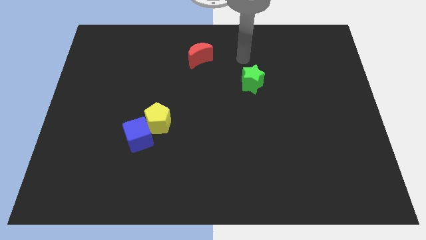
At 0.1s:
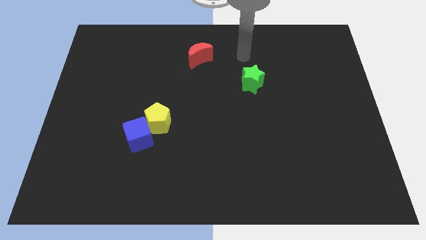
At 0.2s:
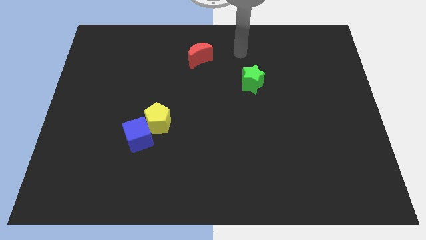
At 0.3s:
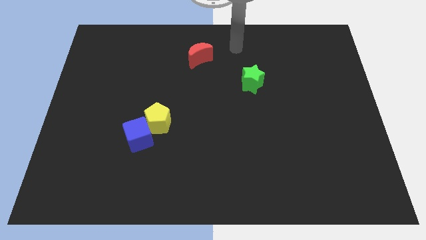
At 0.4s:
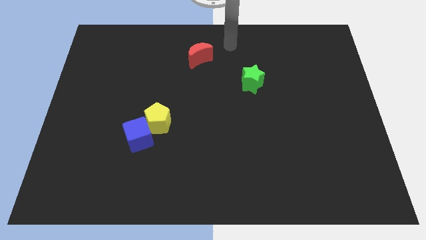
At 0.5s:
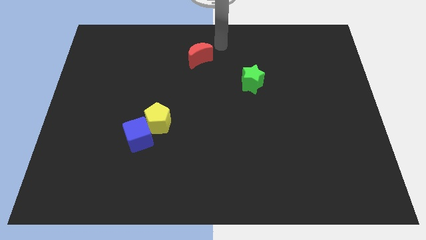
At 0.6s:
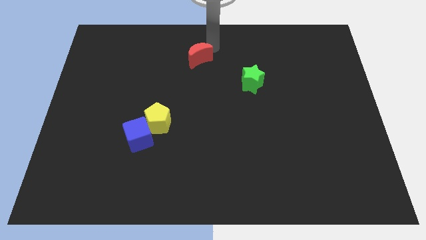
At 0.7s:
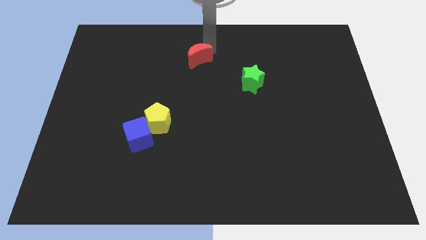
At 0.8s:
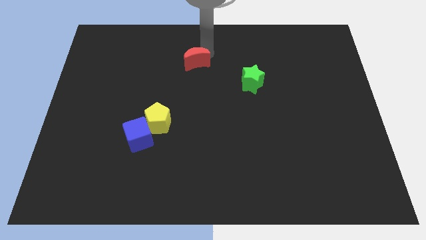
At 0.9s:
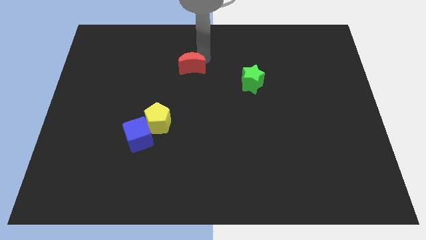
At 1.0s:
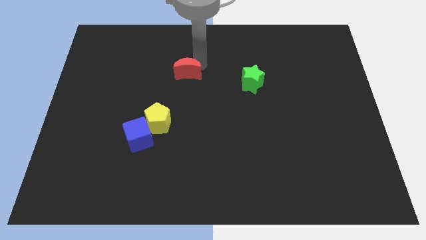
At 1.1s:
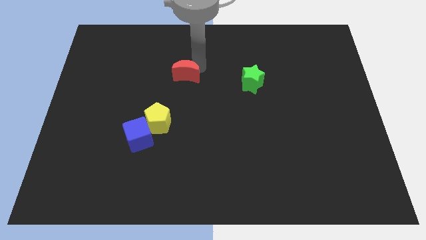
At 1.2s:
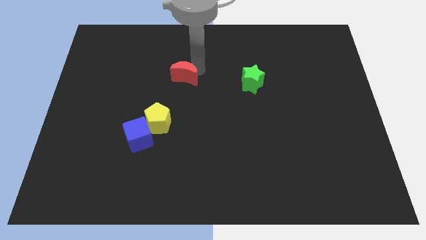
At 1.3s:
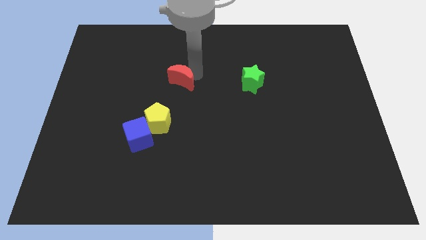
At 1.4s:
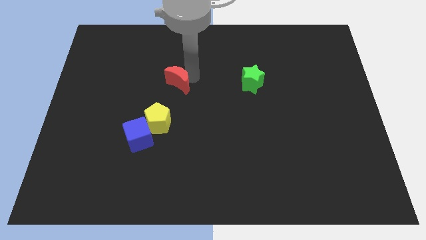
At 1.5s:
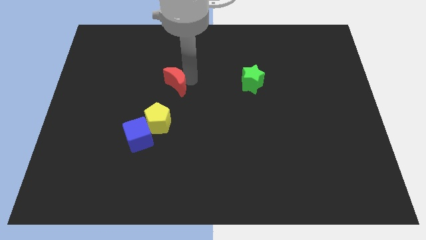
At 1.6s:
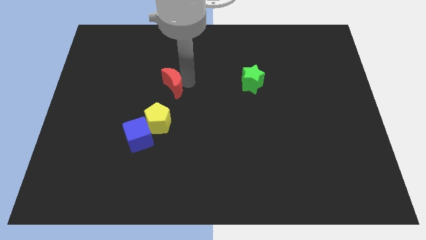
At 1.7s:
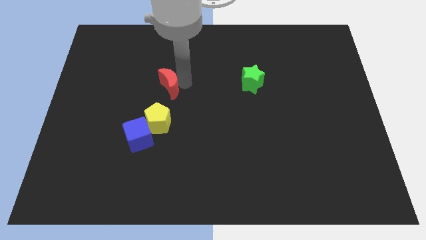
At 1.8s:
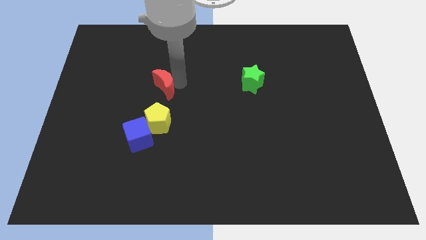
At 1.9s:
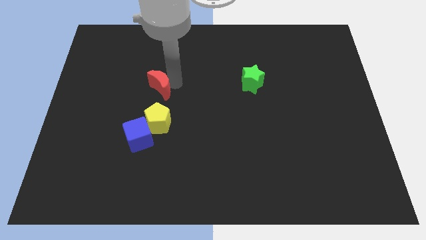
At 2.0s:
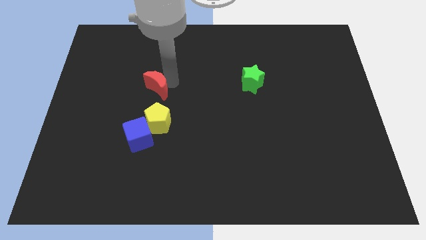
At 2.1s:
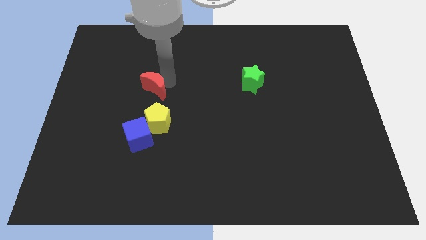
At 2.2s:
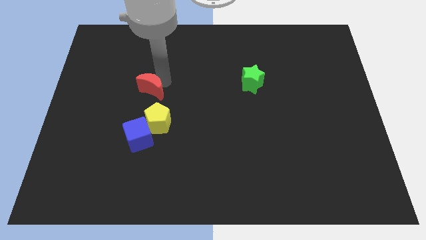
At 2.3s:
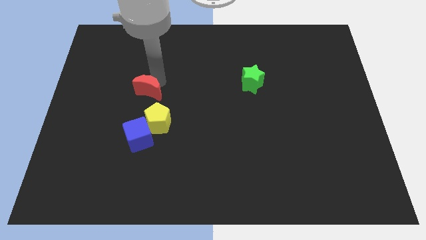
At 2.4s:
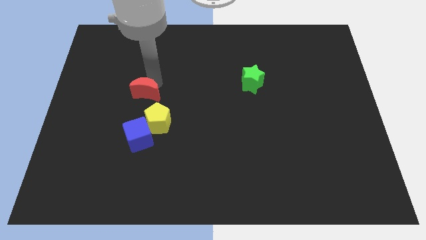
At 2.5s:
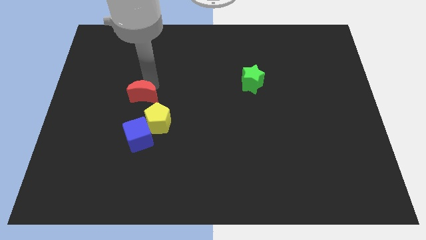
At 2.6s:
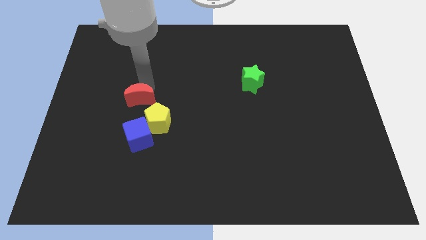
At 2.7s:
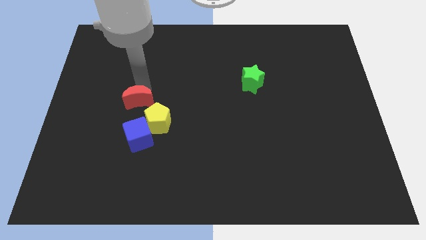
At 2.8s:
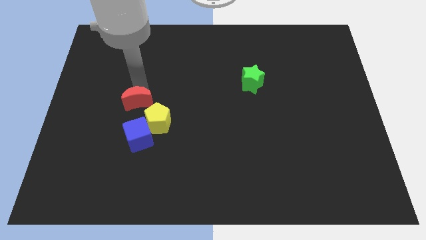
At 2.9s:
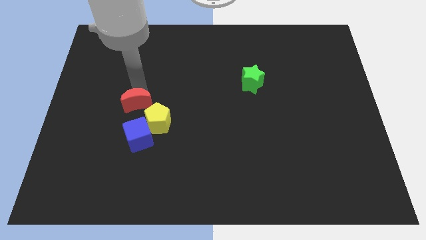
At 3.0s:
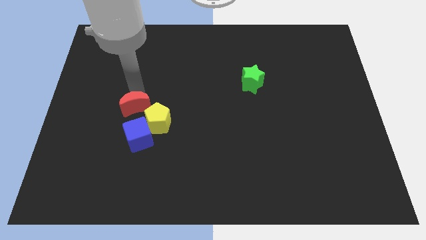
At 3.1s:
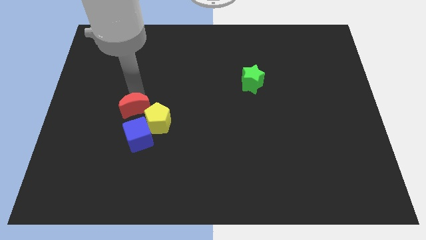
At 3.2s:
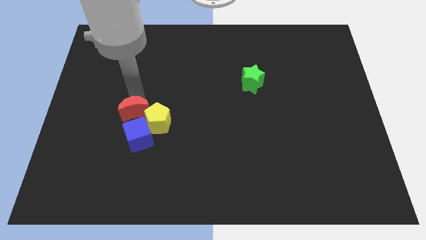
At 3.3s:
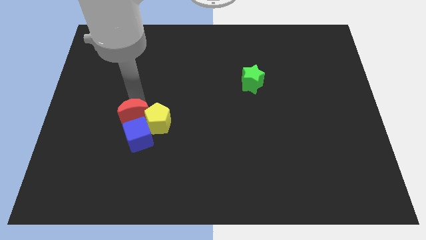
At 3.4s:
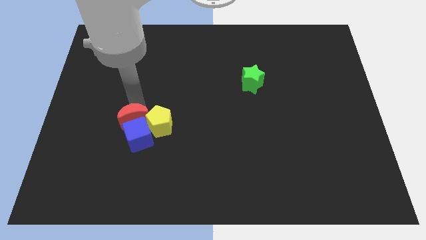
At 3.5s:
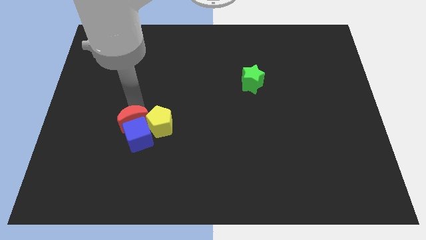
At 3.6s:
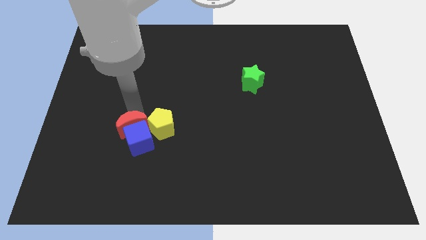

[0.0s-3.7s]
push the moon to the cube

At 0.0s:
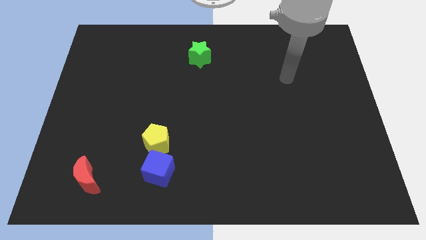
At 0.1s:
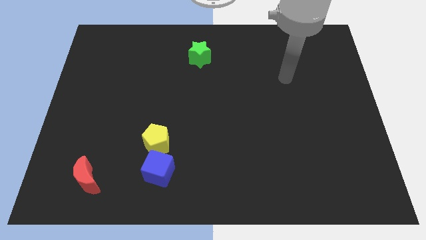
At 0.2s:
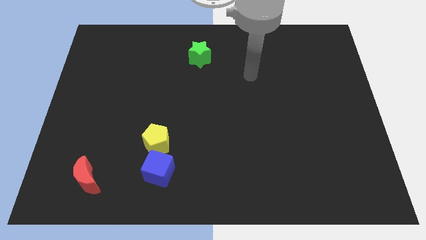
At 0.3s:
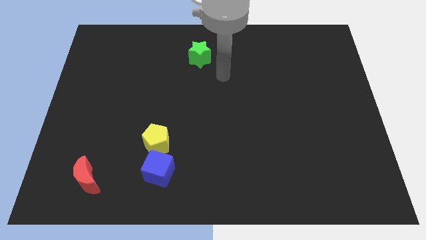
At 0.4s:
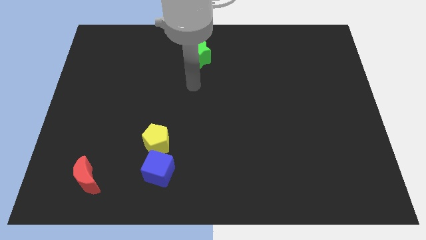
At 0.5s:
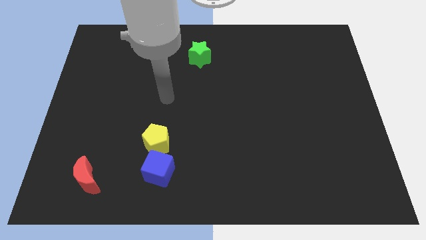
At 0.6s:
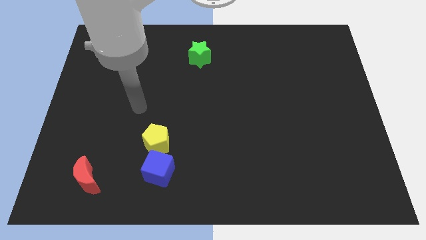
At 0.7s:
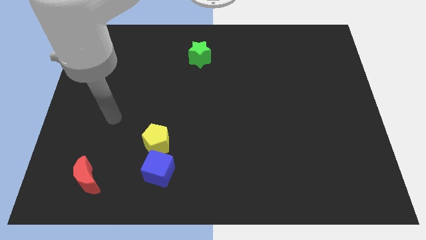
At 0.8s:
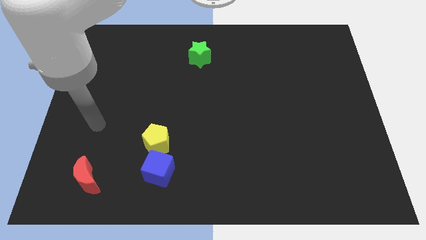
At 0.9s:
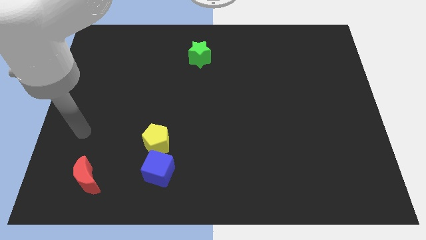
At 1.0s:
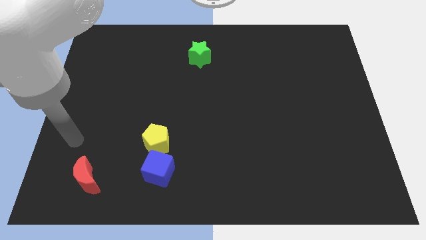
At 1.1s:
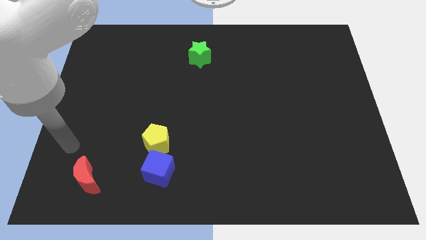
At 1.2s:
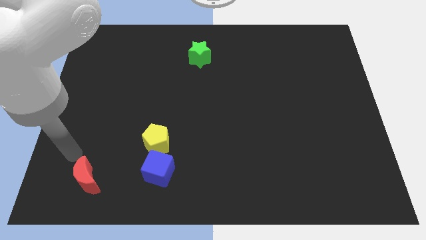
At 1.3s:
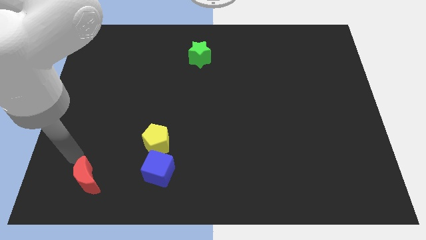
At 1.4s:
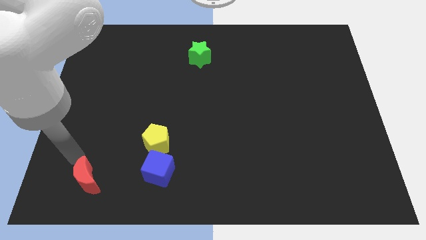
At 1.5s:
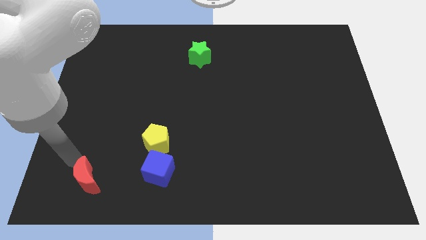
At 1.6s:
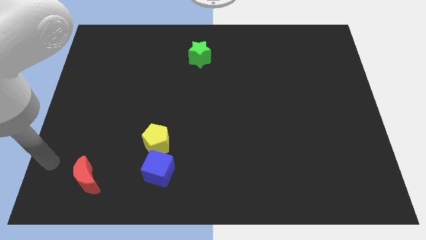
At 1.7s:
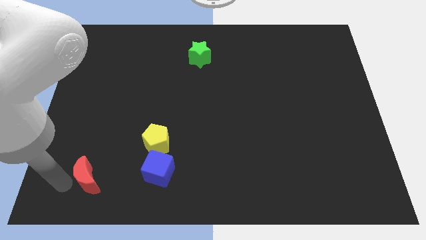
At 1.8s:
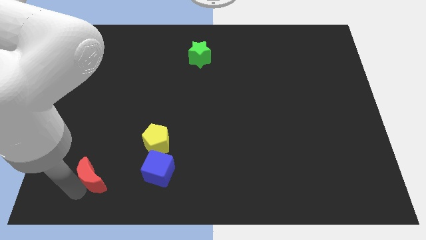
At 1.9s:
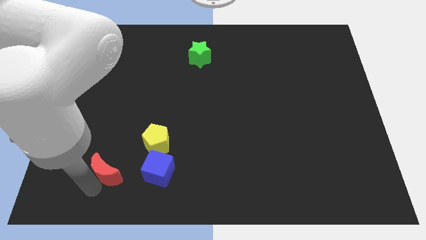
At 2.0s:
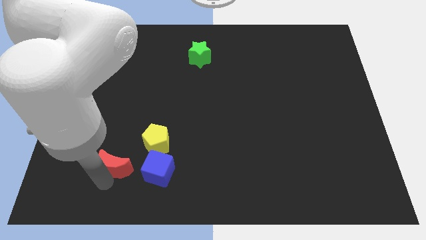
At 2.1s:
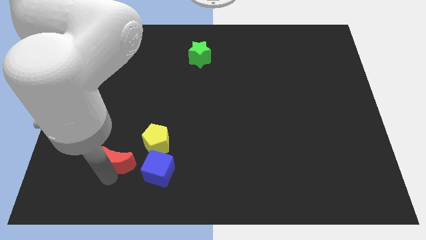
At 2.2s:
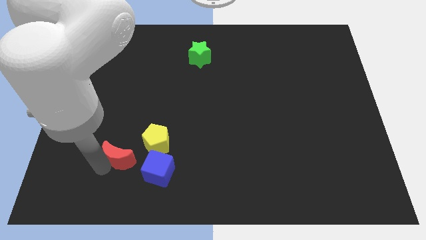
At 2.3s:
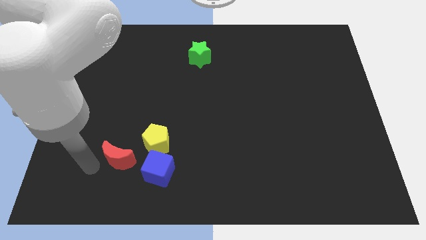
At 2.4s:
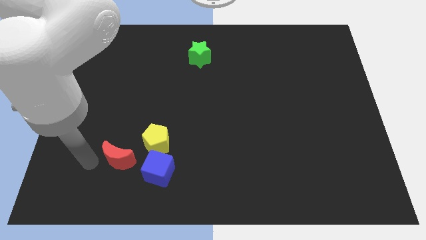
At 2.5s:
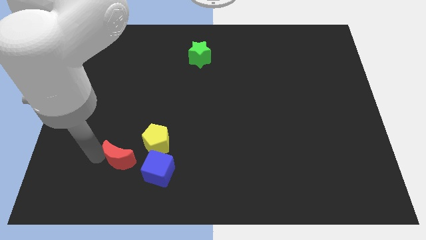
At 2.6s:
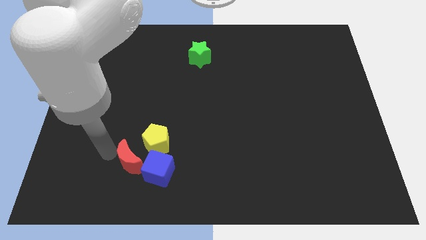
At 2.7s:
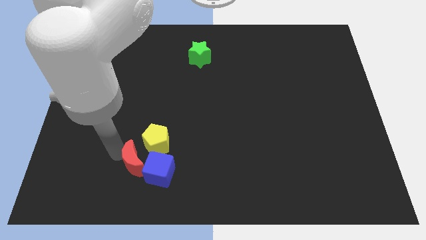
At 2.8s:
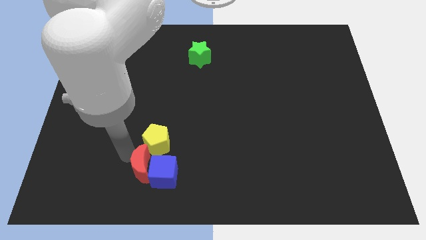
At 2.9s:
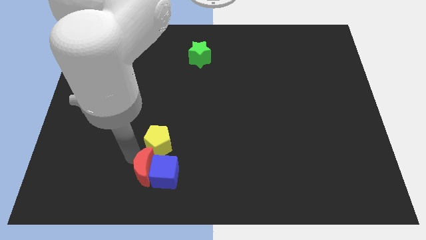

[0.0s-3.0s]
move the red block towards the blue cube

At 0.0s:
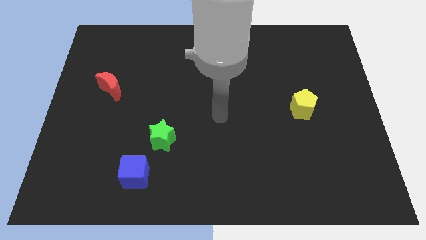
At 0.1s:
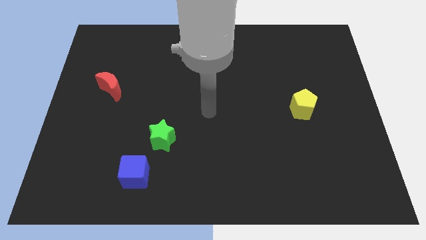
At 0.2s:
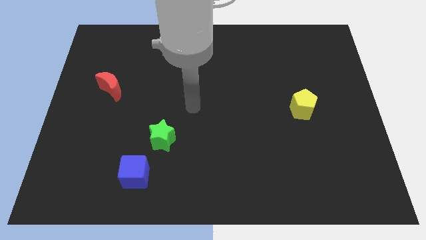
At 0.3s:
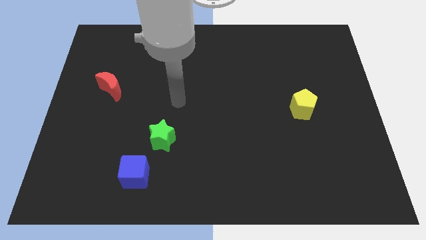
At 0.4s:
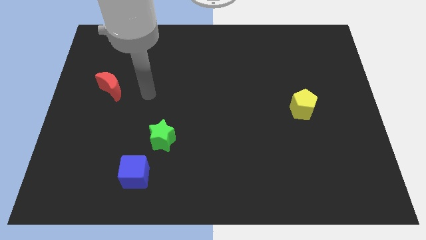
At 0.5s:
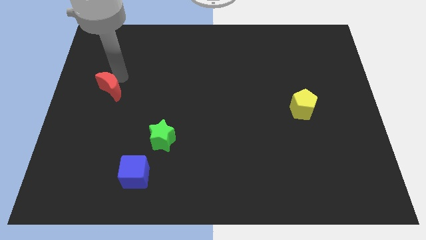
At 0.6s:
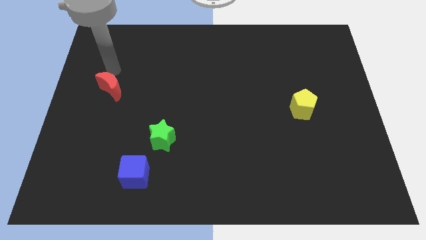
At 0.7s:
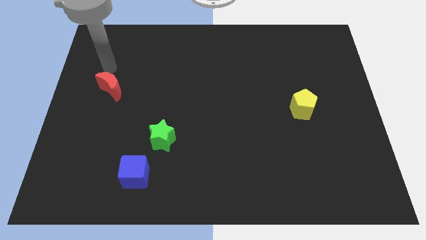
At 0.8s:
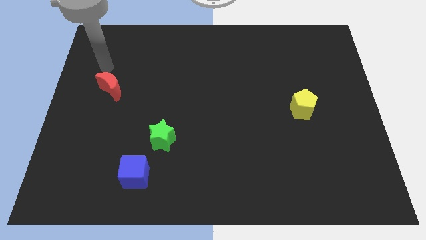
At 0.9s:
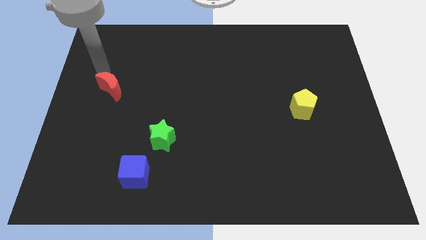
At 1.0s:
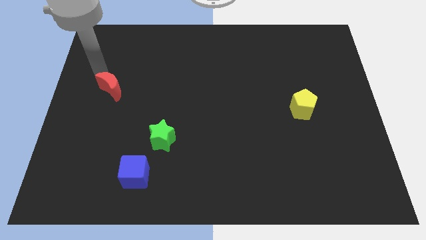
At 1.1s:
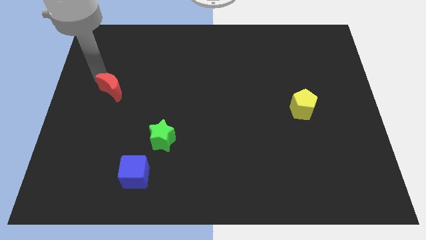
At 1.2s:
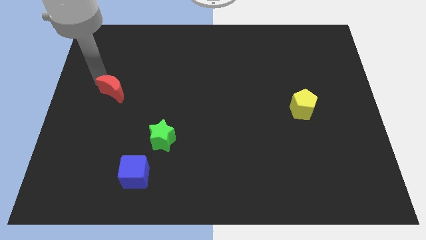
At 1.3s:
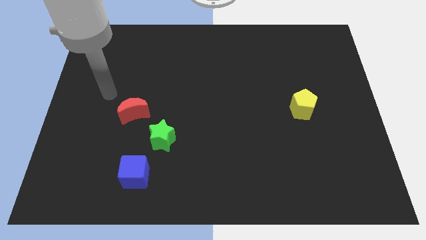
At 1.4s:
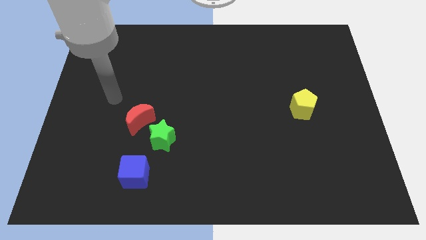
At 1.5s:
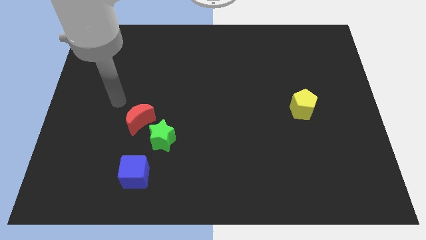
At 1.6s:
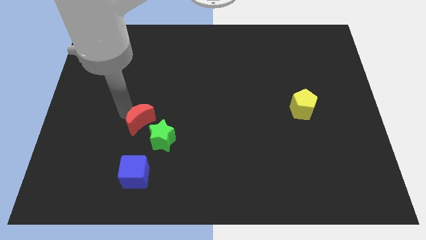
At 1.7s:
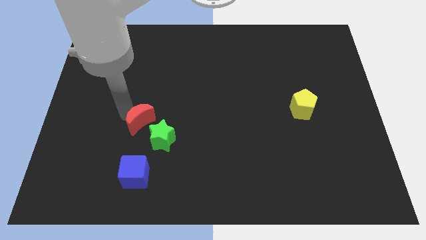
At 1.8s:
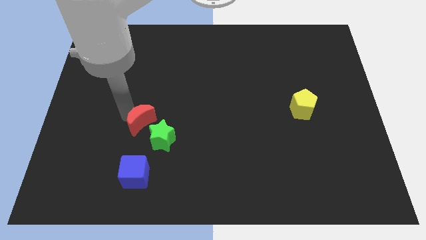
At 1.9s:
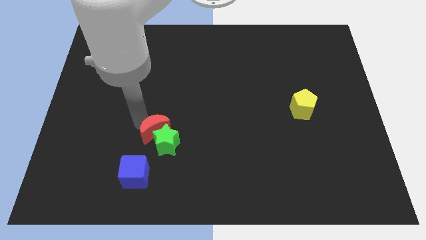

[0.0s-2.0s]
put the red block towards the green star
